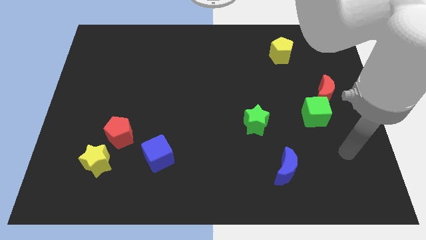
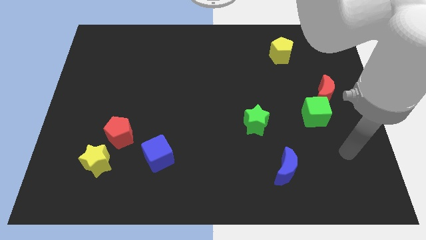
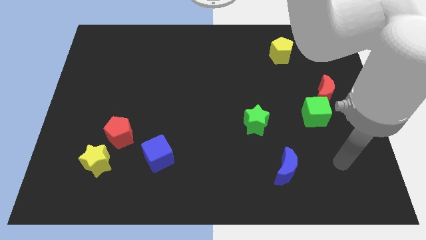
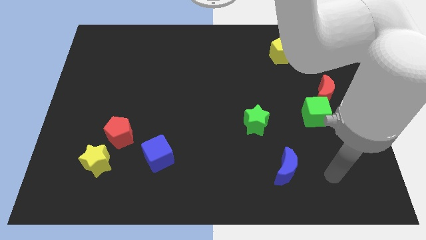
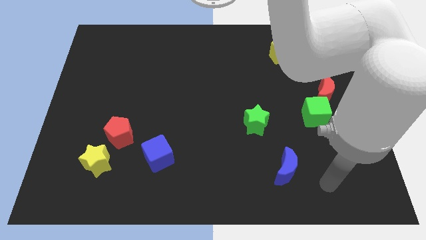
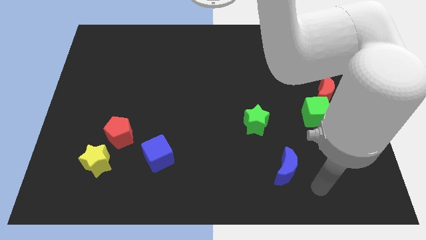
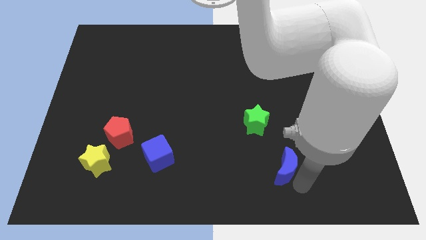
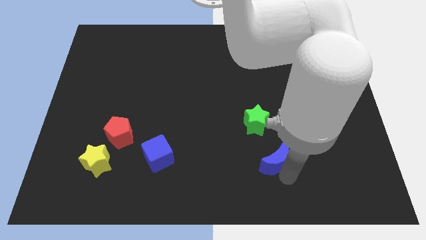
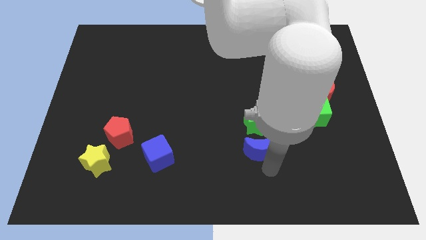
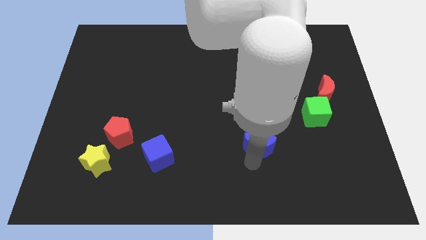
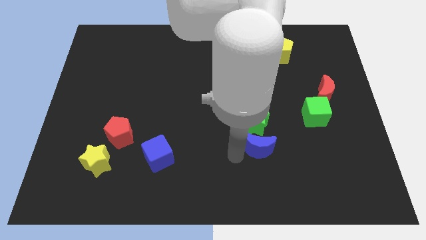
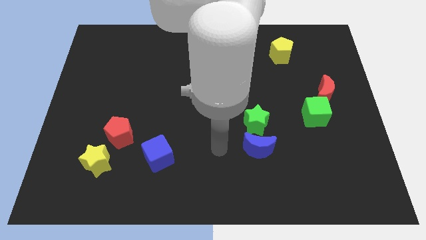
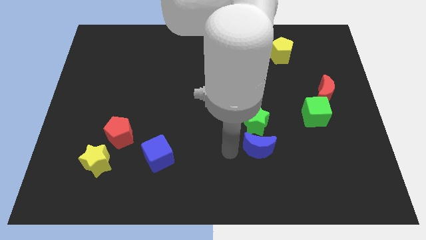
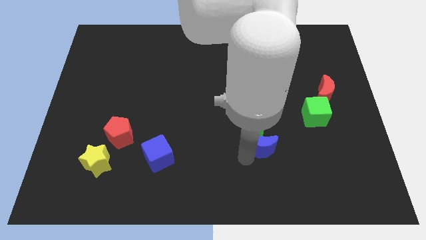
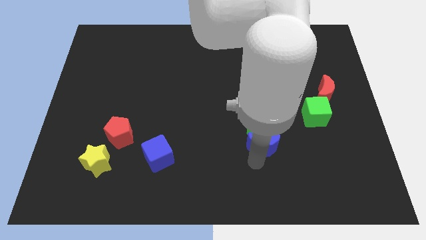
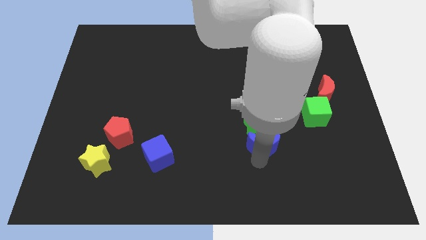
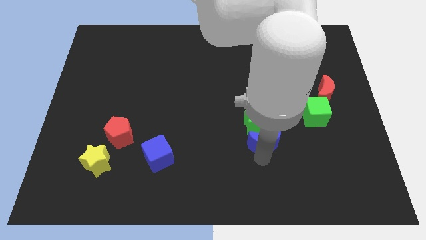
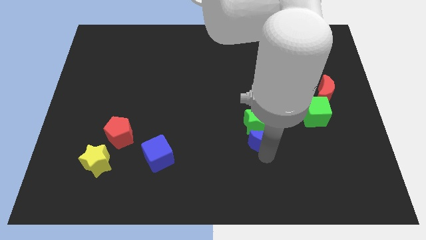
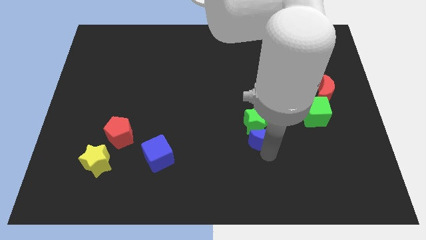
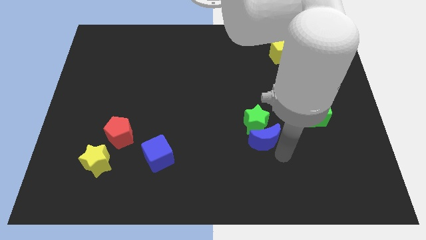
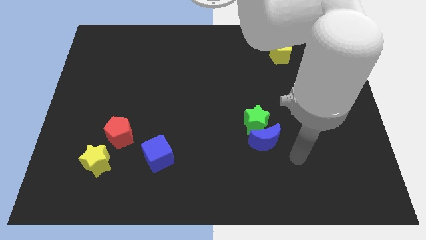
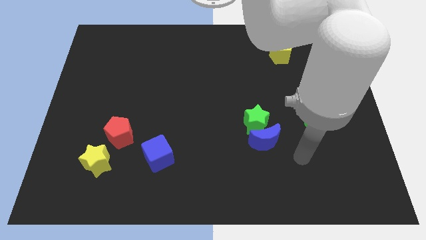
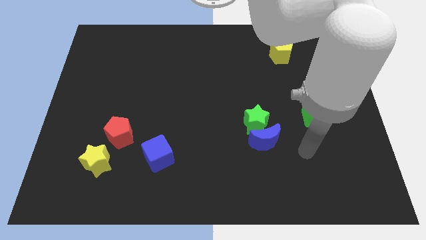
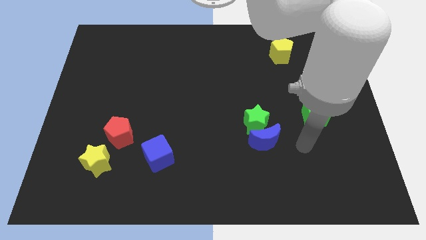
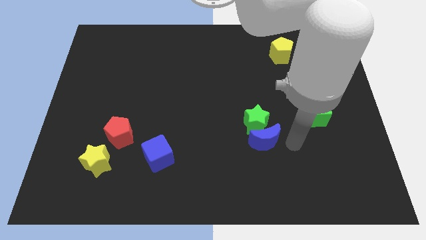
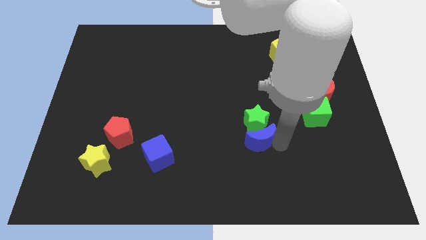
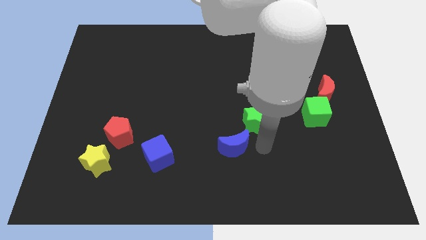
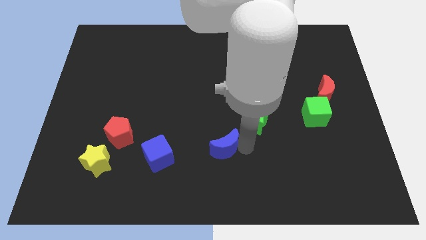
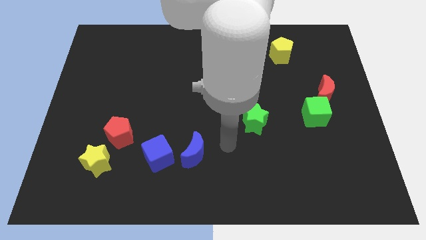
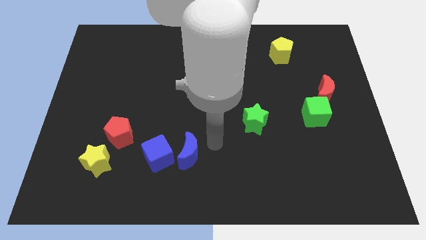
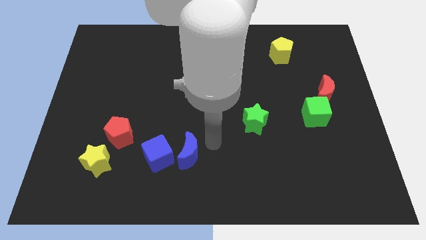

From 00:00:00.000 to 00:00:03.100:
move the blue moon right to the blue cube

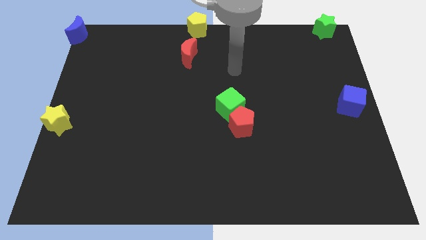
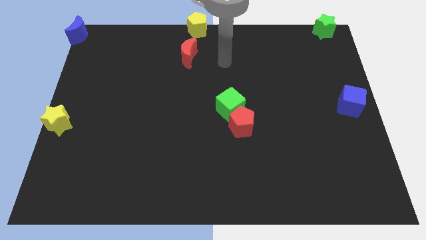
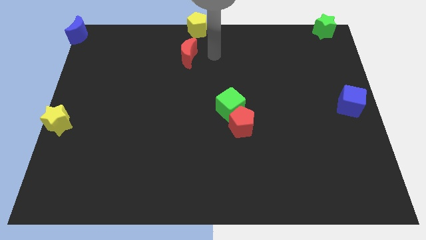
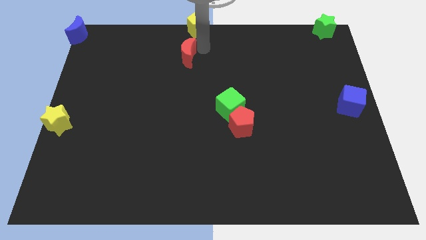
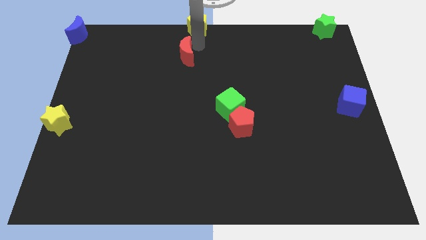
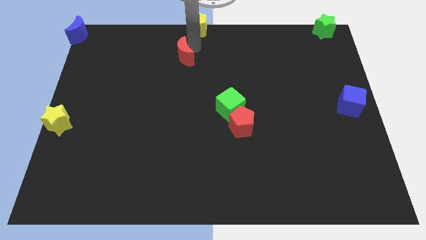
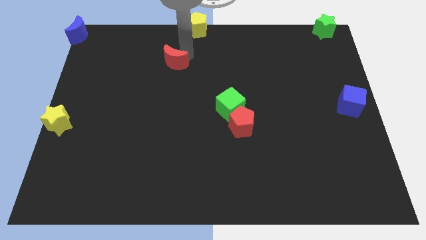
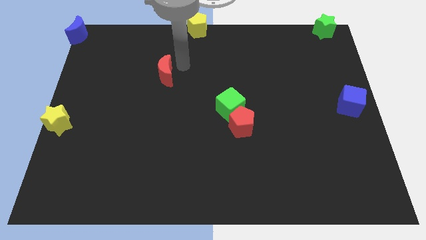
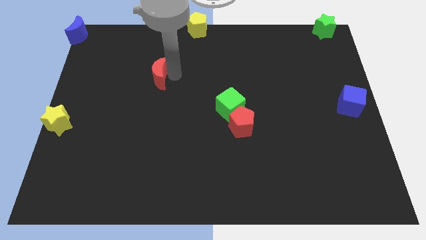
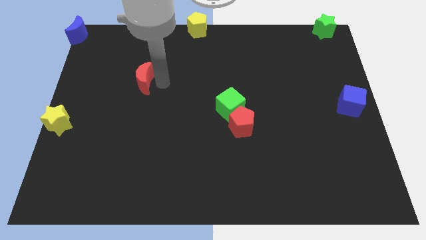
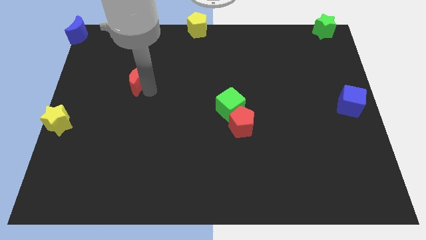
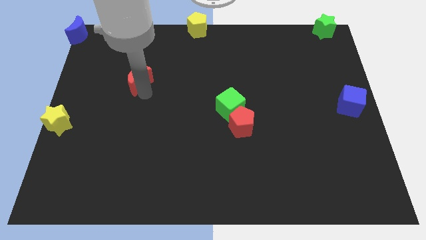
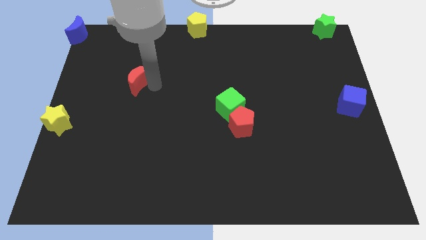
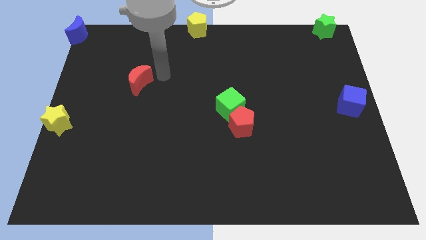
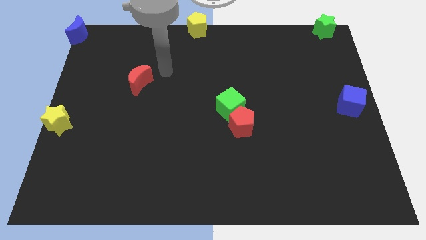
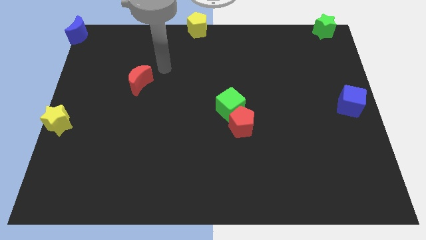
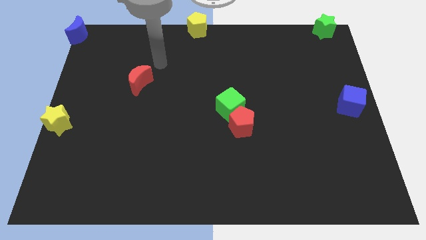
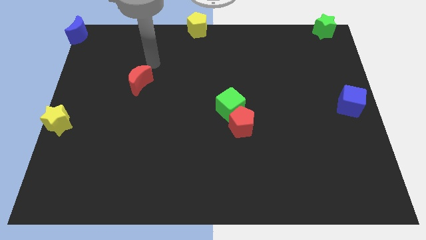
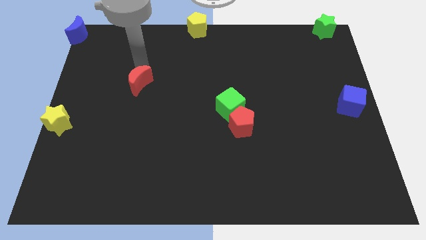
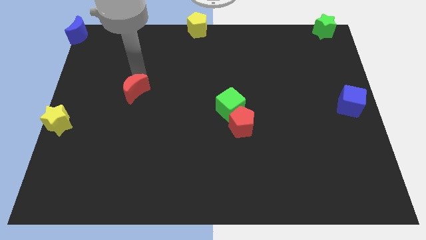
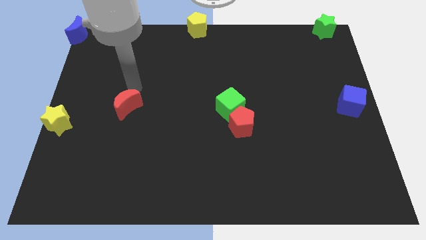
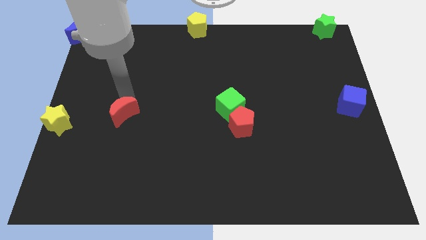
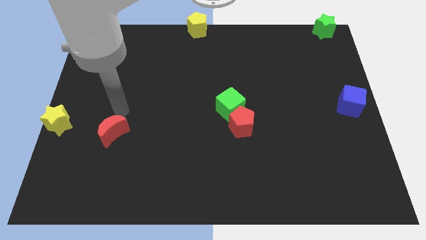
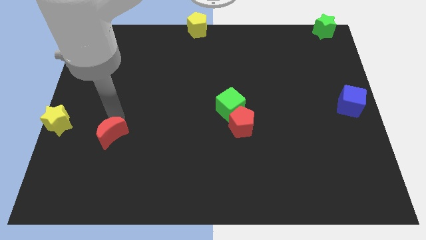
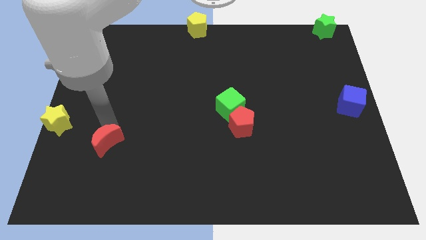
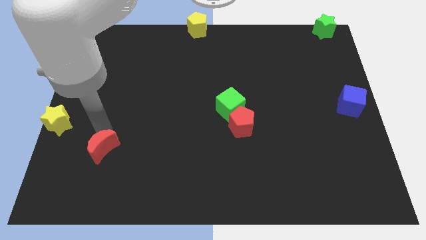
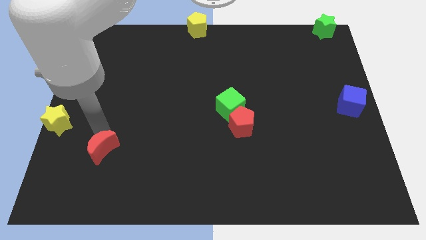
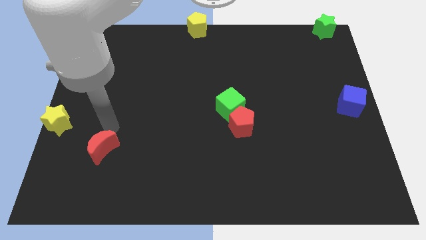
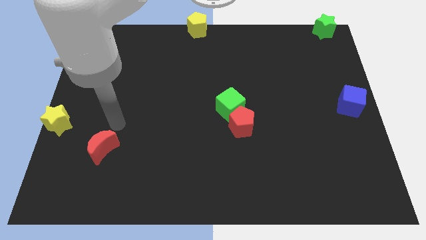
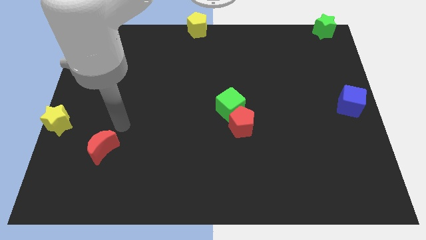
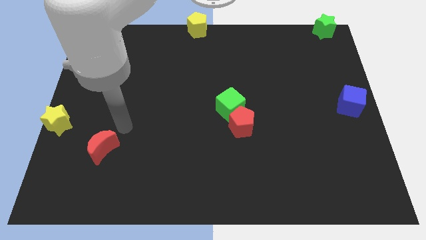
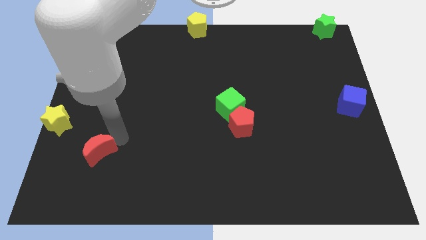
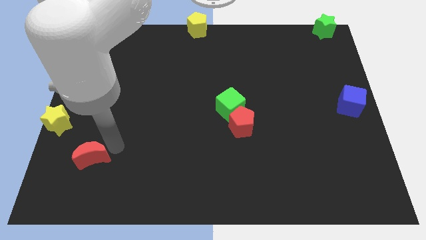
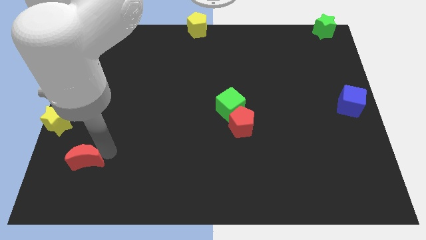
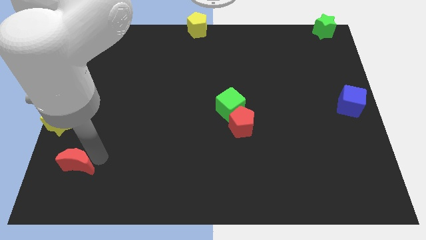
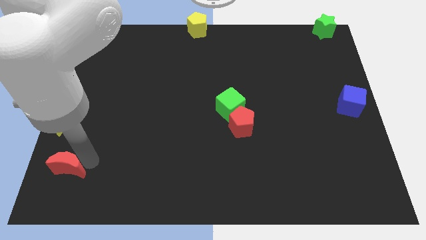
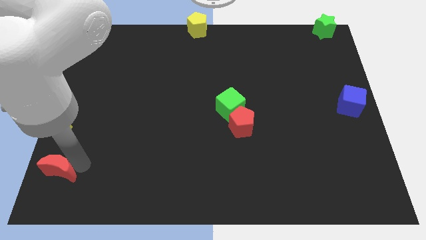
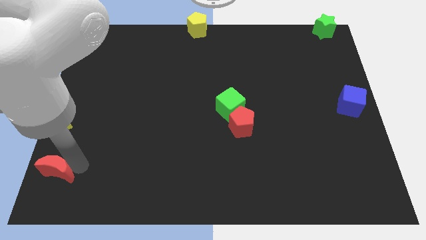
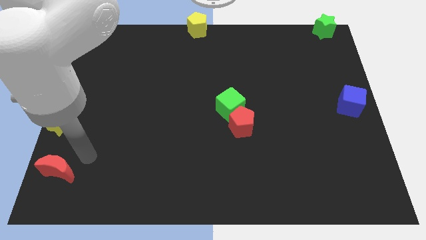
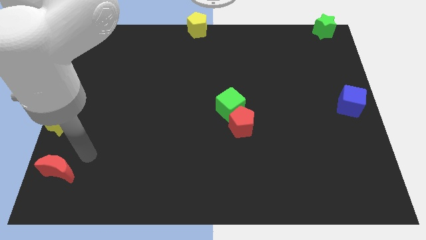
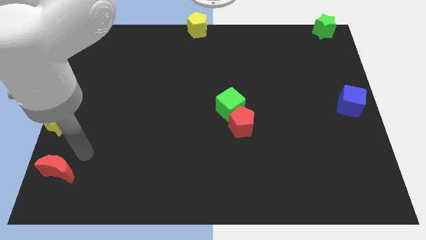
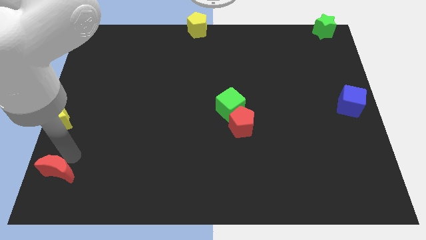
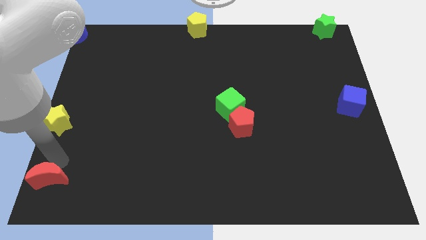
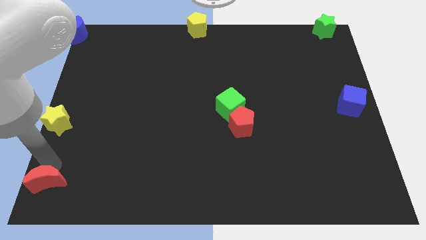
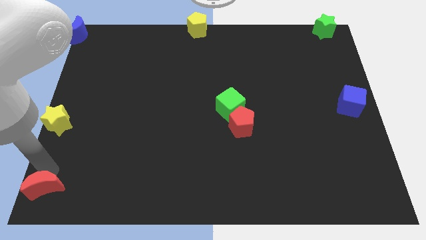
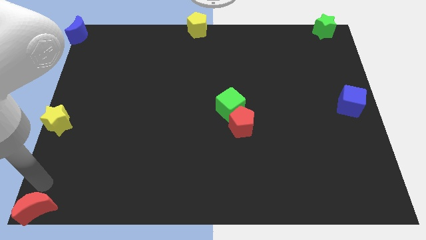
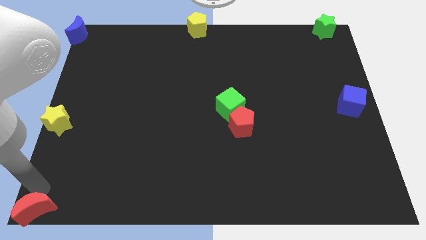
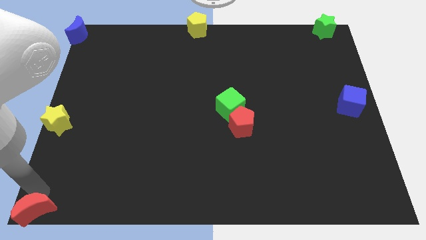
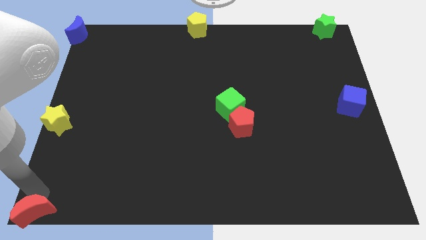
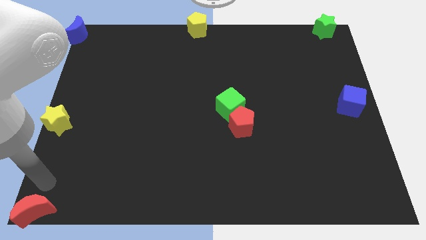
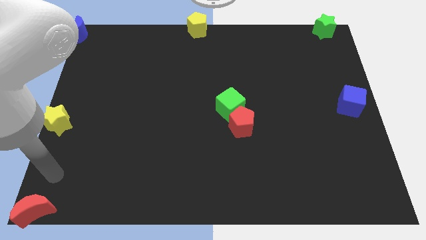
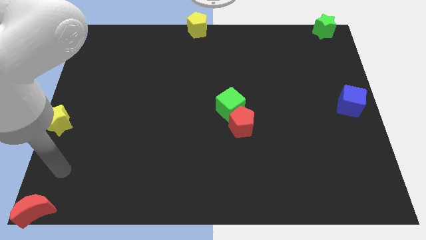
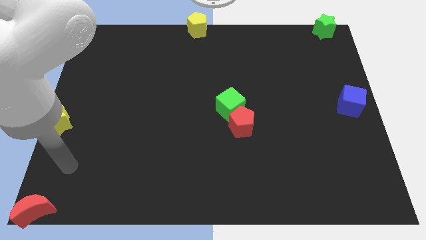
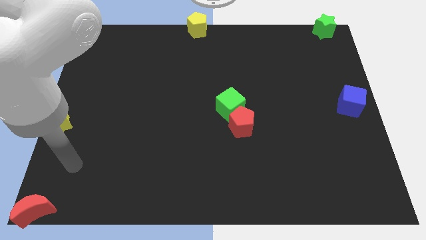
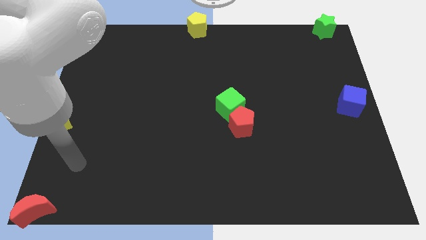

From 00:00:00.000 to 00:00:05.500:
move the red moon to the bottom left corner

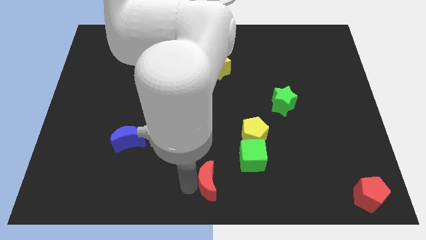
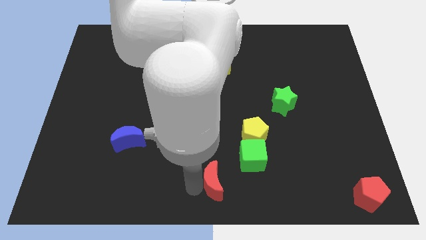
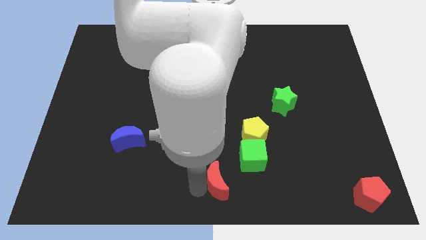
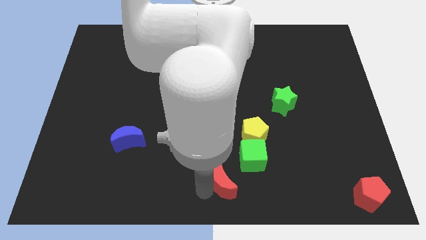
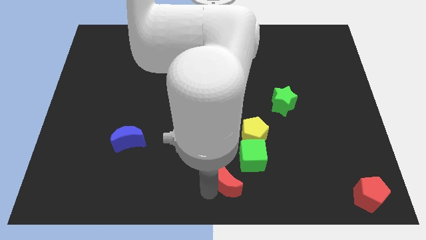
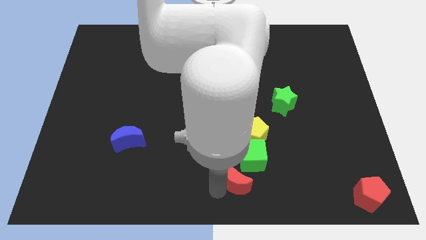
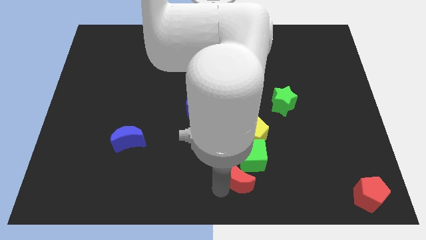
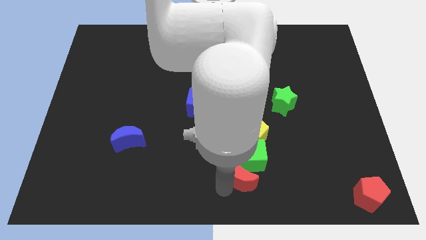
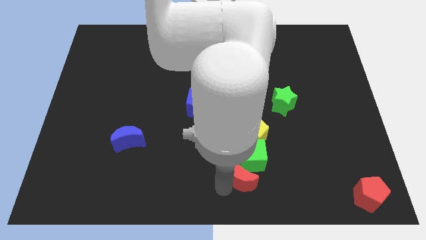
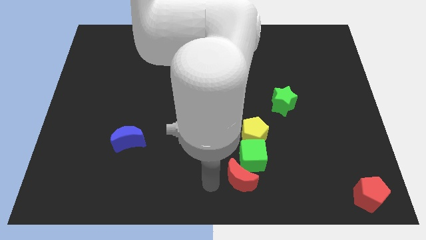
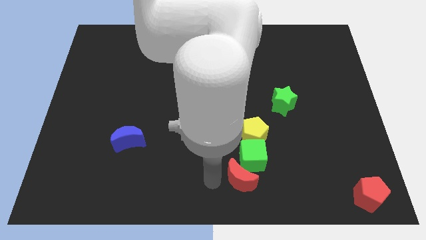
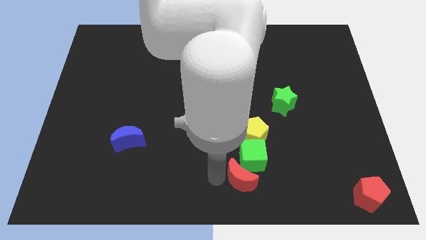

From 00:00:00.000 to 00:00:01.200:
move red moon into green cube
